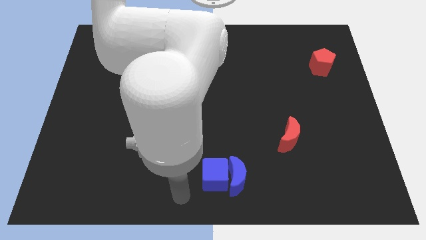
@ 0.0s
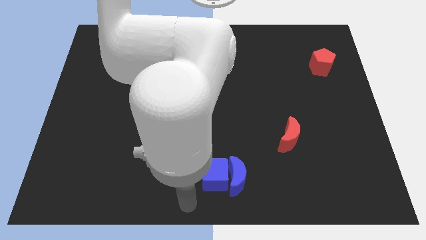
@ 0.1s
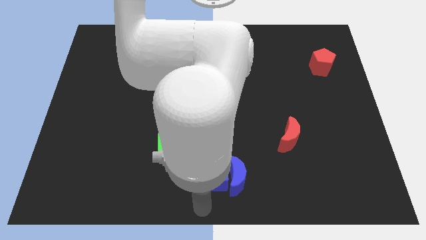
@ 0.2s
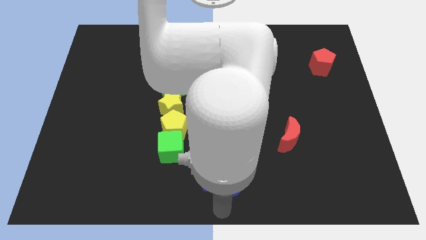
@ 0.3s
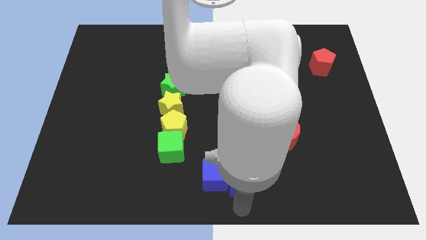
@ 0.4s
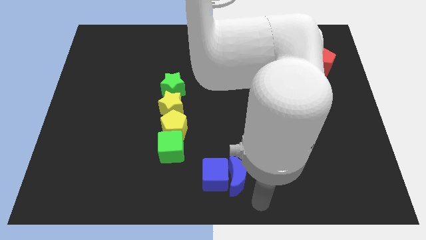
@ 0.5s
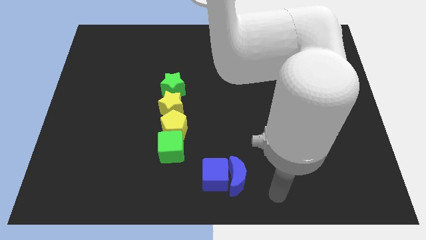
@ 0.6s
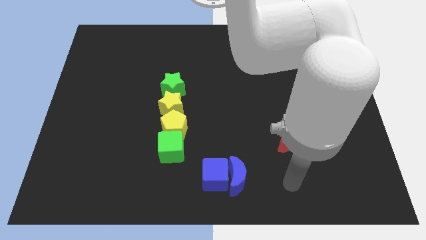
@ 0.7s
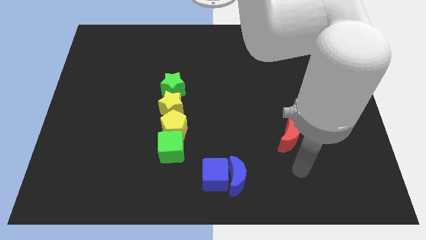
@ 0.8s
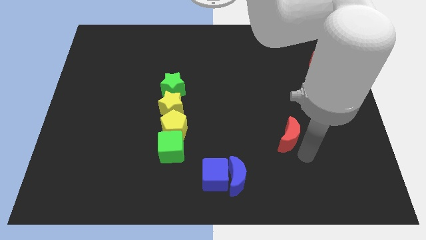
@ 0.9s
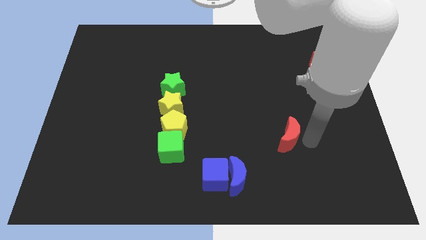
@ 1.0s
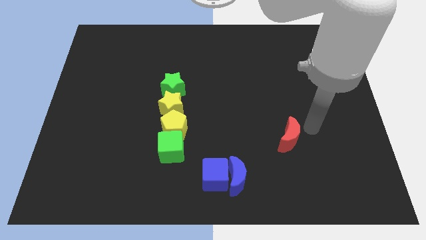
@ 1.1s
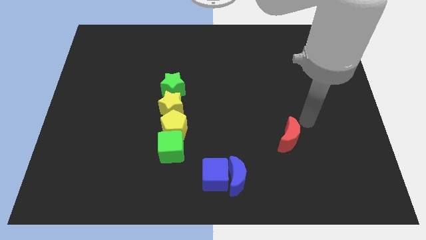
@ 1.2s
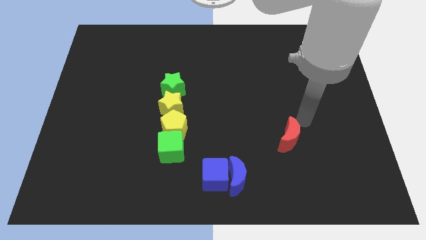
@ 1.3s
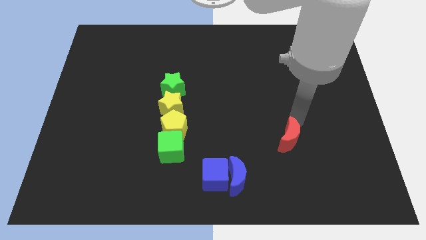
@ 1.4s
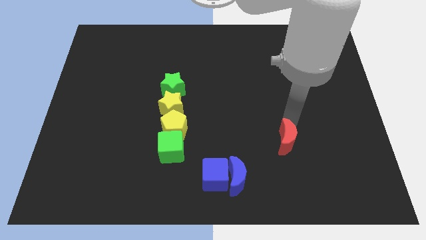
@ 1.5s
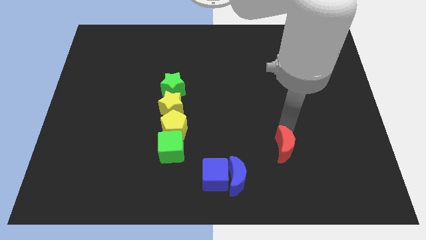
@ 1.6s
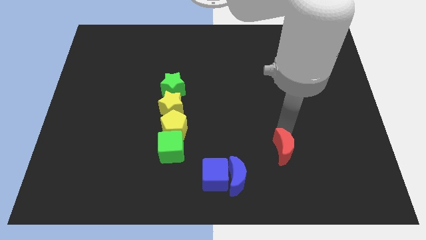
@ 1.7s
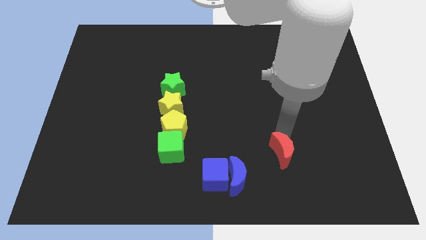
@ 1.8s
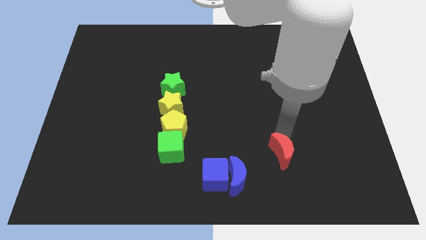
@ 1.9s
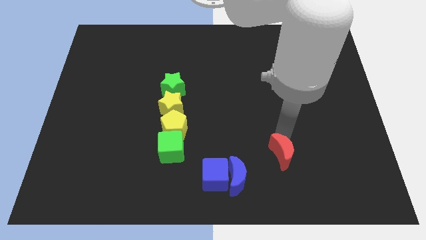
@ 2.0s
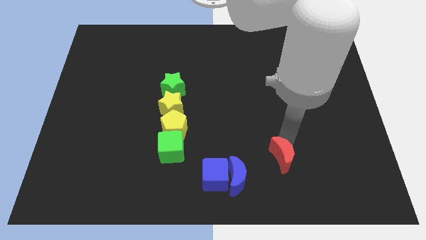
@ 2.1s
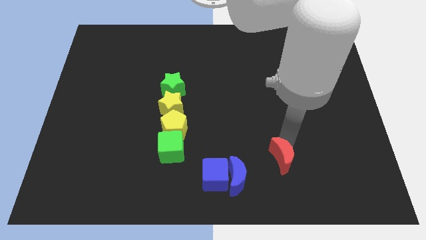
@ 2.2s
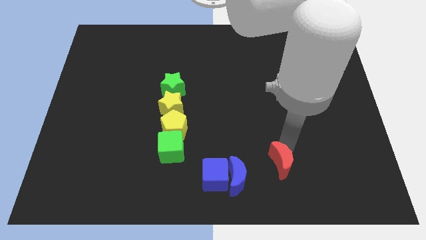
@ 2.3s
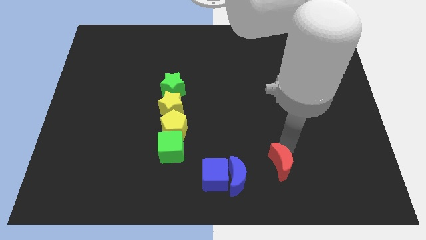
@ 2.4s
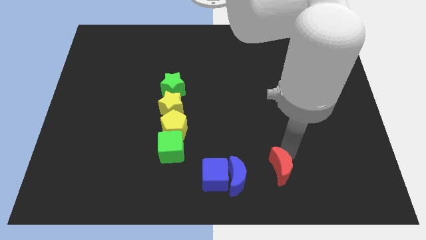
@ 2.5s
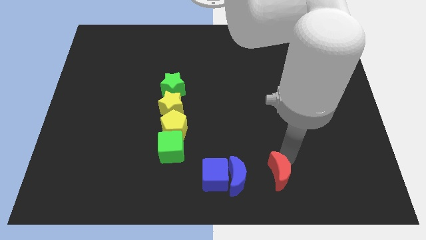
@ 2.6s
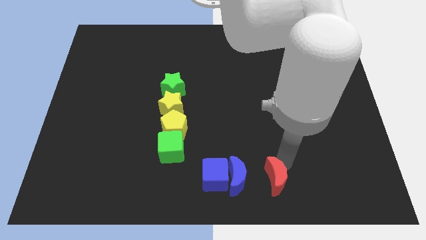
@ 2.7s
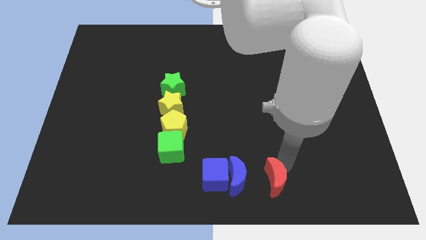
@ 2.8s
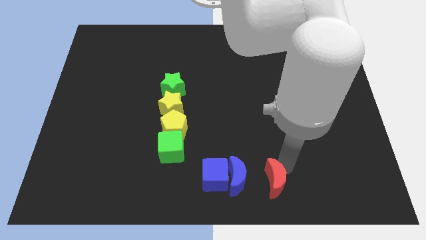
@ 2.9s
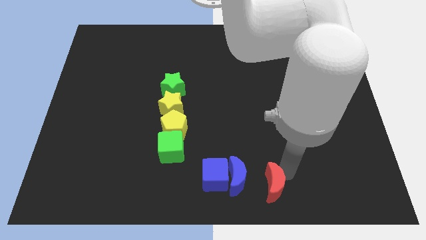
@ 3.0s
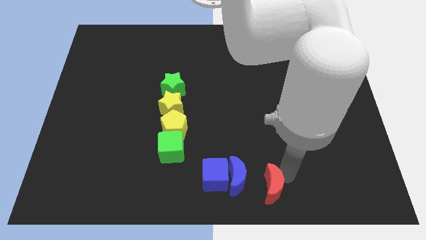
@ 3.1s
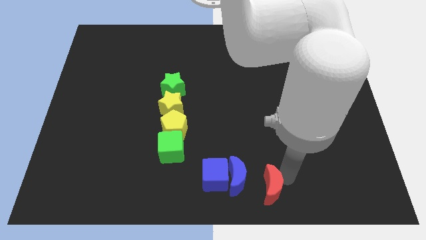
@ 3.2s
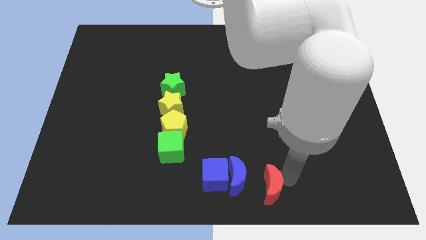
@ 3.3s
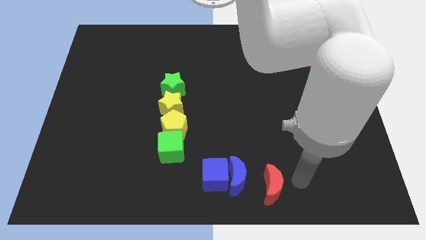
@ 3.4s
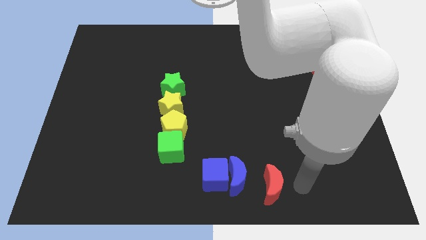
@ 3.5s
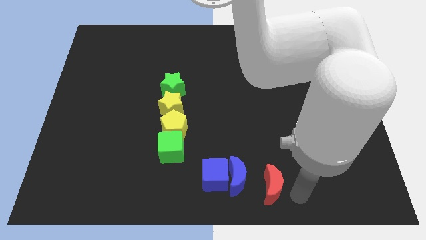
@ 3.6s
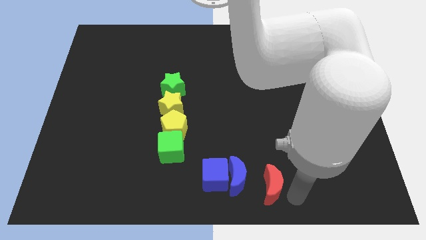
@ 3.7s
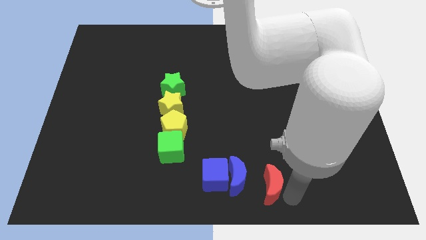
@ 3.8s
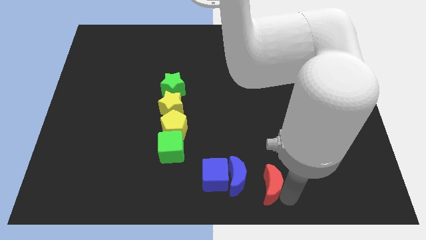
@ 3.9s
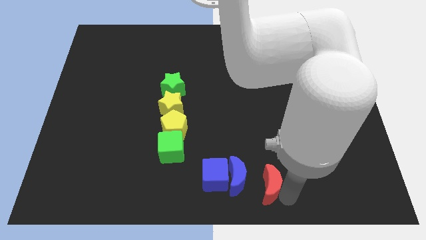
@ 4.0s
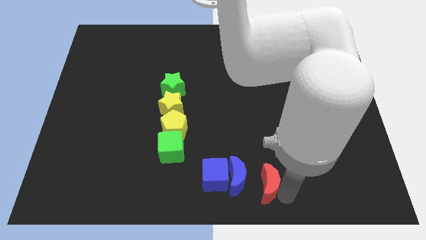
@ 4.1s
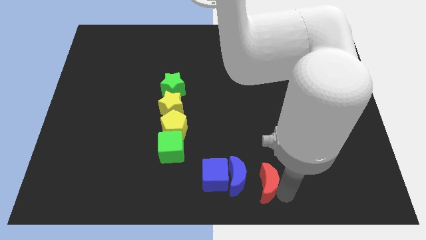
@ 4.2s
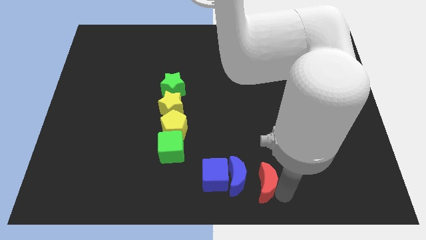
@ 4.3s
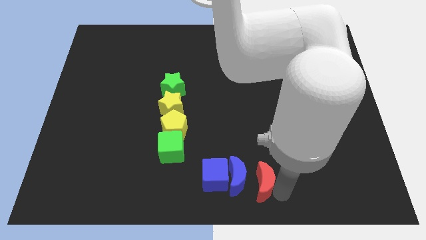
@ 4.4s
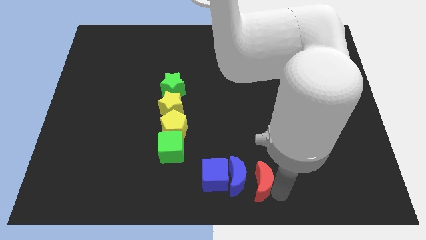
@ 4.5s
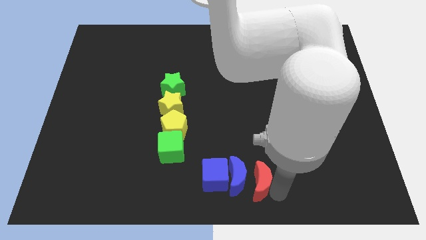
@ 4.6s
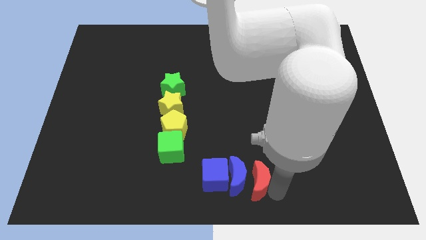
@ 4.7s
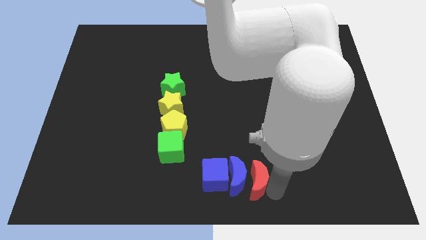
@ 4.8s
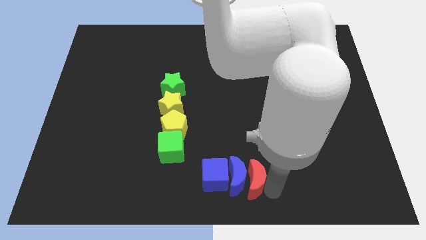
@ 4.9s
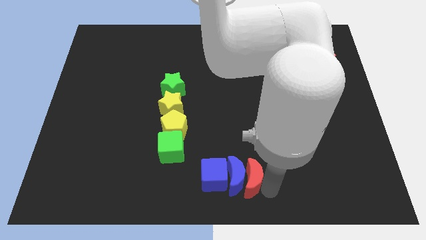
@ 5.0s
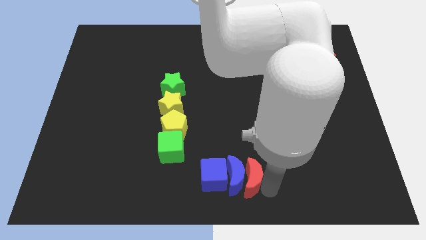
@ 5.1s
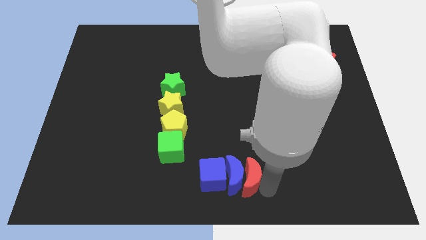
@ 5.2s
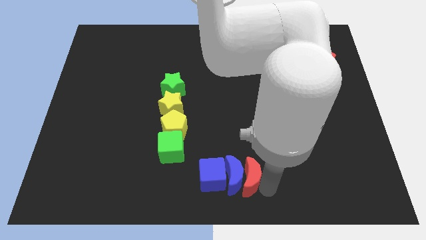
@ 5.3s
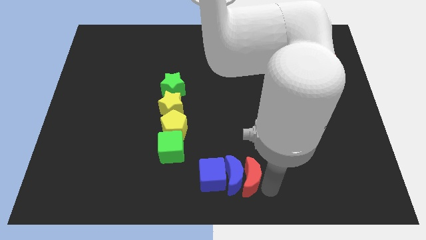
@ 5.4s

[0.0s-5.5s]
push the red block into the right side of the blue block

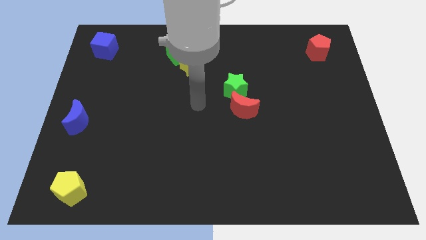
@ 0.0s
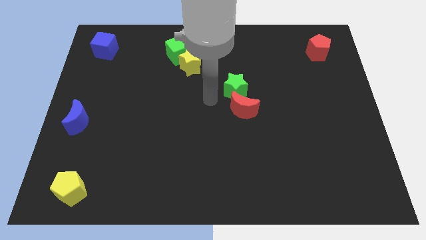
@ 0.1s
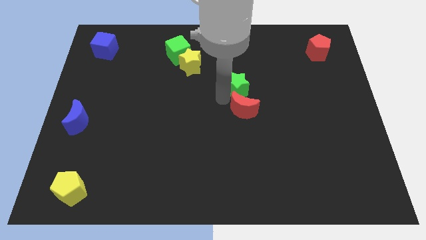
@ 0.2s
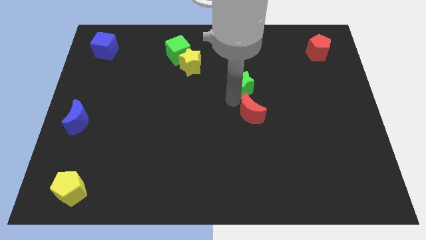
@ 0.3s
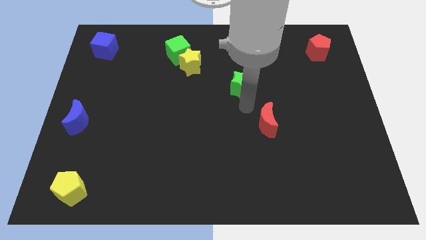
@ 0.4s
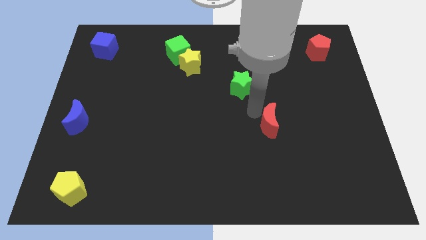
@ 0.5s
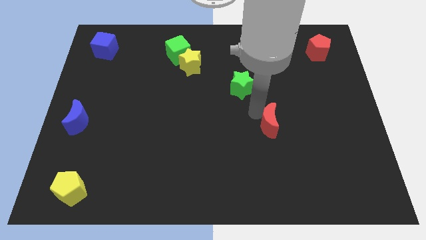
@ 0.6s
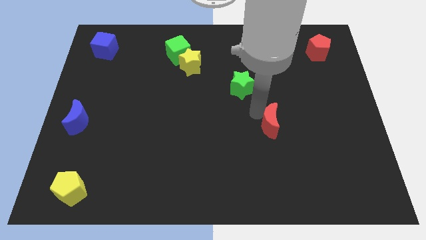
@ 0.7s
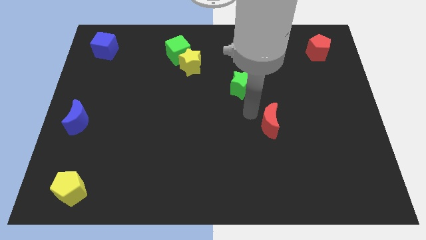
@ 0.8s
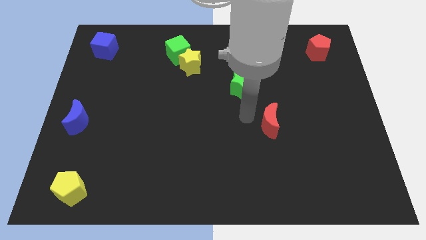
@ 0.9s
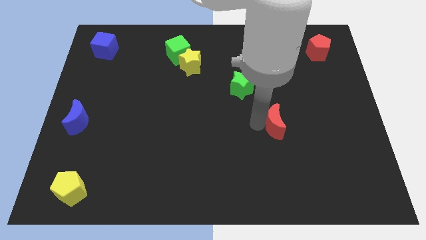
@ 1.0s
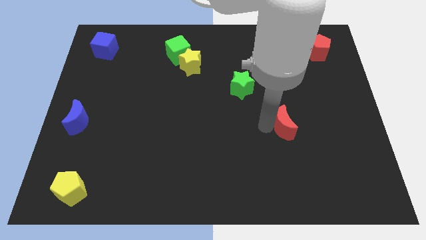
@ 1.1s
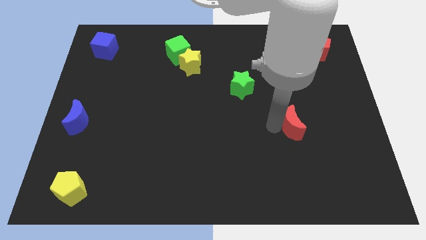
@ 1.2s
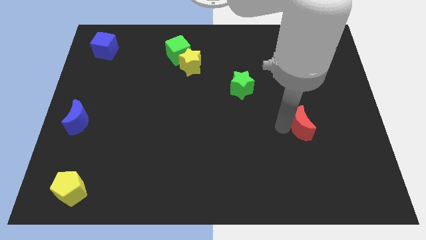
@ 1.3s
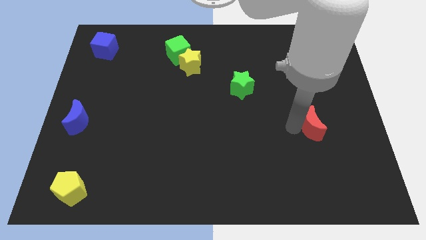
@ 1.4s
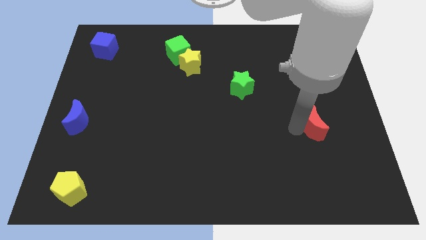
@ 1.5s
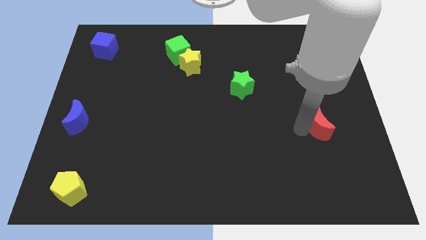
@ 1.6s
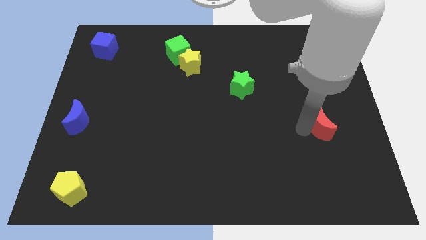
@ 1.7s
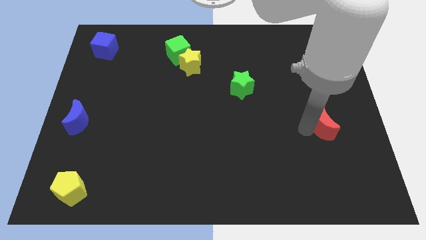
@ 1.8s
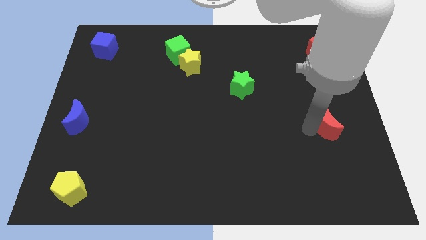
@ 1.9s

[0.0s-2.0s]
separate the red recent from the green star

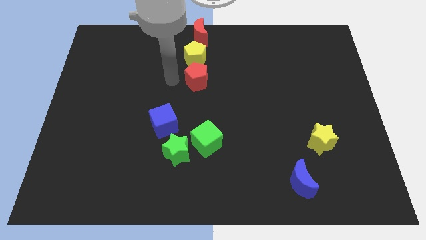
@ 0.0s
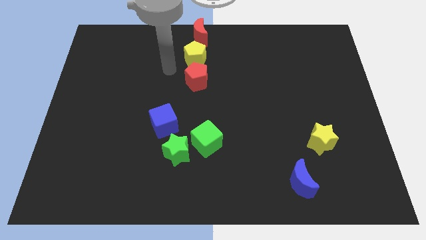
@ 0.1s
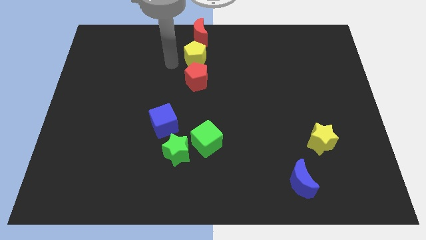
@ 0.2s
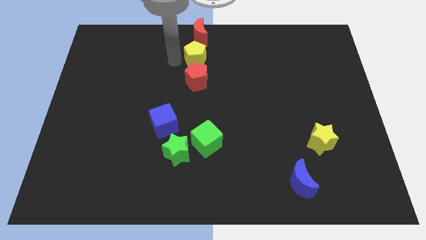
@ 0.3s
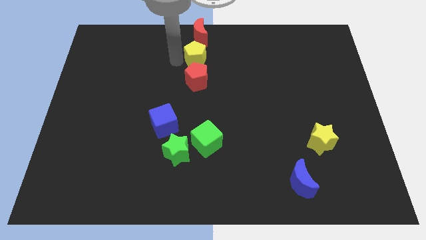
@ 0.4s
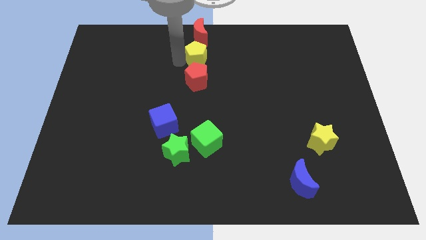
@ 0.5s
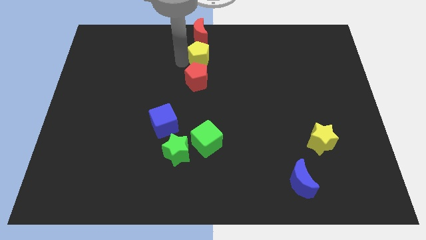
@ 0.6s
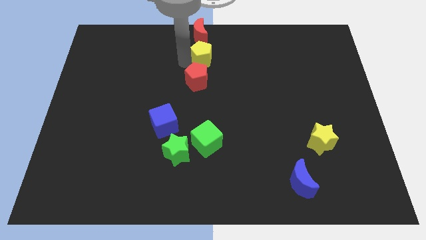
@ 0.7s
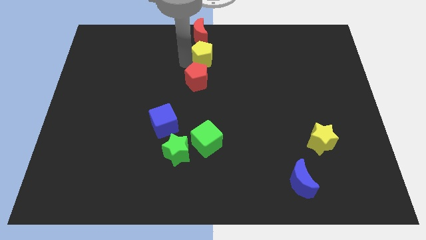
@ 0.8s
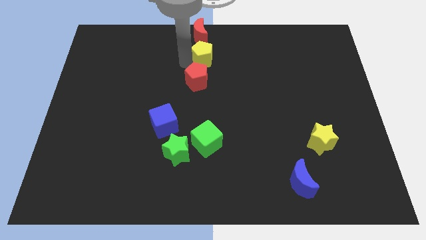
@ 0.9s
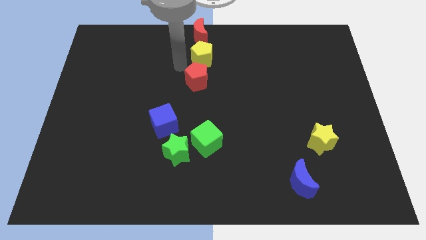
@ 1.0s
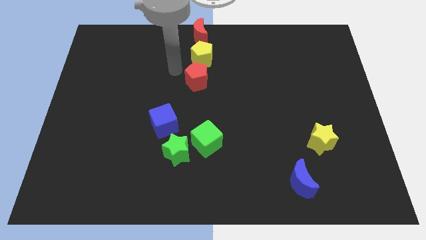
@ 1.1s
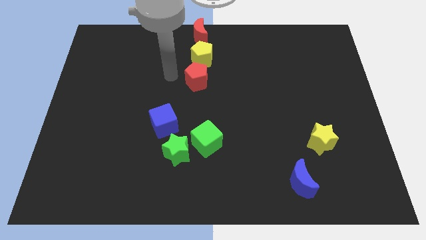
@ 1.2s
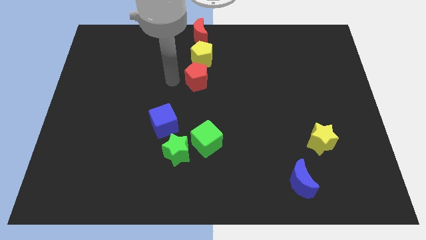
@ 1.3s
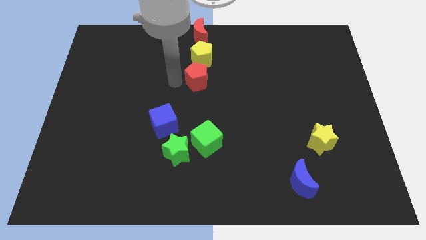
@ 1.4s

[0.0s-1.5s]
push yellow pentagon slightly right side

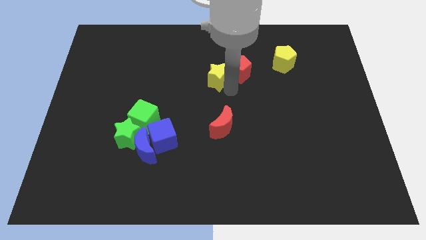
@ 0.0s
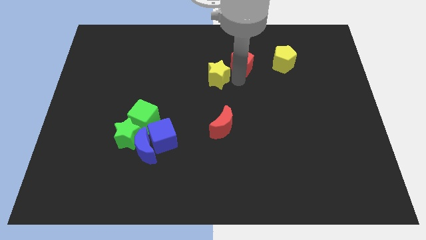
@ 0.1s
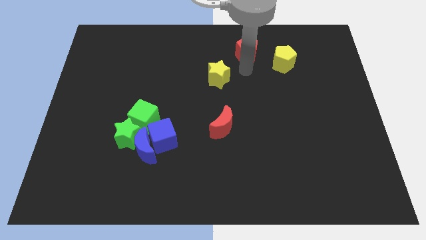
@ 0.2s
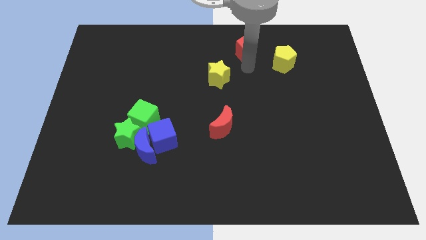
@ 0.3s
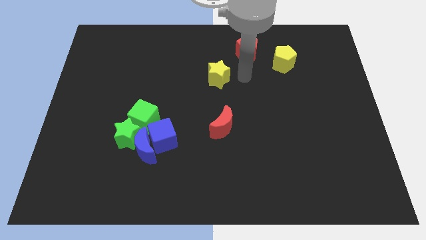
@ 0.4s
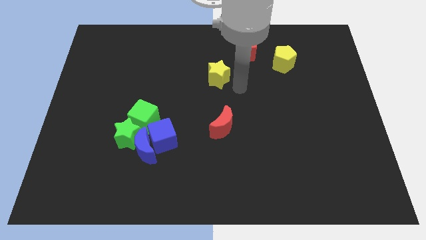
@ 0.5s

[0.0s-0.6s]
push the red pentagon away from the yellow star
